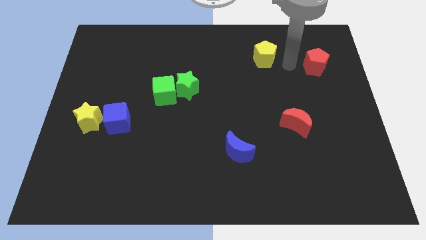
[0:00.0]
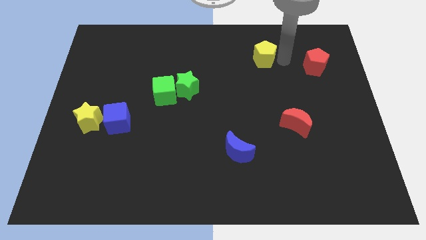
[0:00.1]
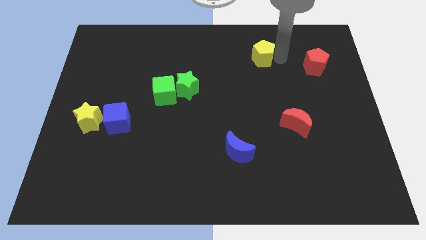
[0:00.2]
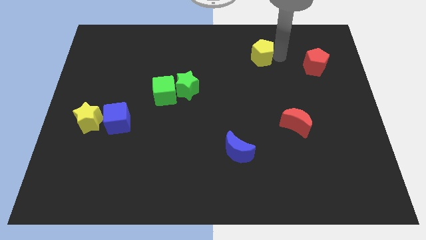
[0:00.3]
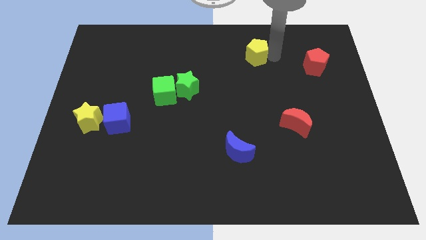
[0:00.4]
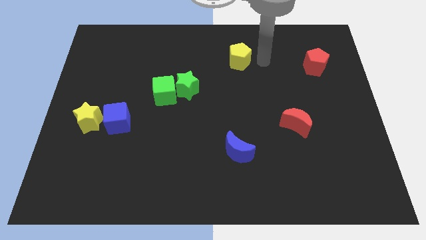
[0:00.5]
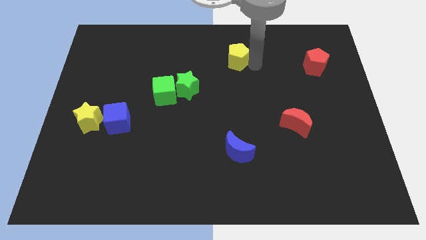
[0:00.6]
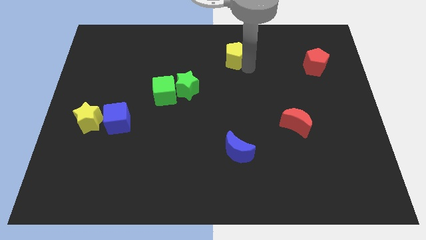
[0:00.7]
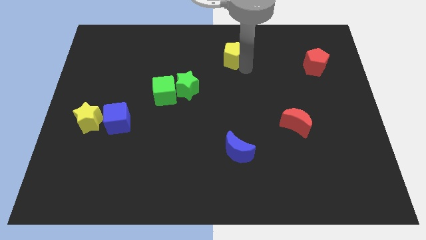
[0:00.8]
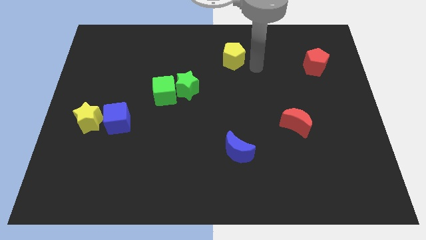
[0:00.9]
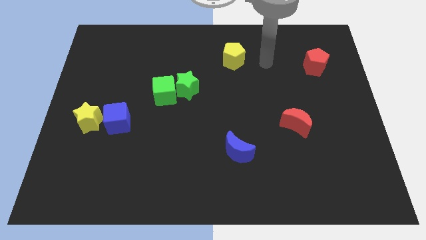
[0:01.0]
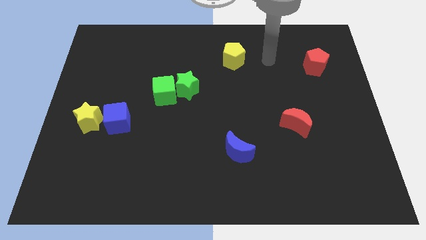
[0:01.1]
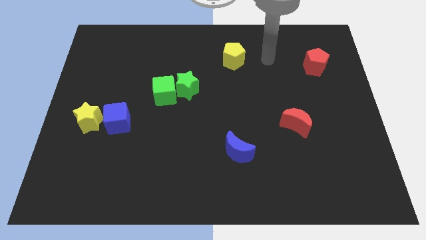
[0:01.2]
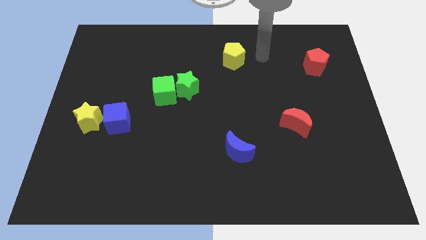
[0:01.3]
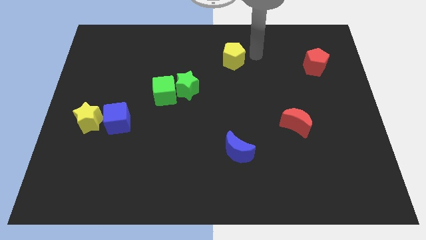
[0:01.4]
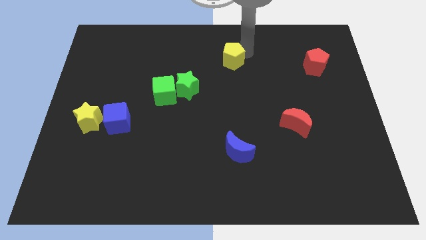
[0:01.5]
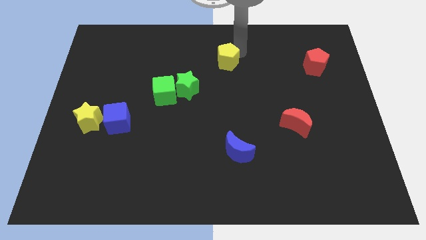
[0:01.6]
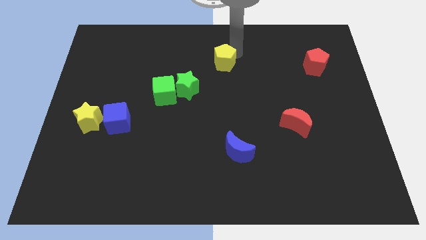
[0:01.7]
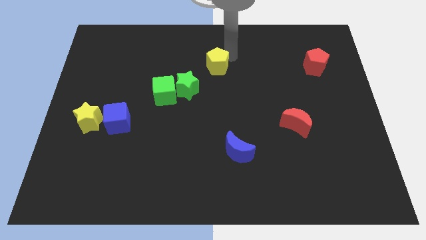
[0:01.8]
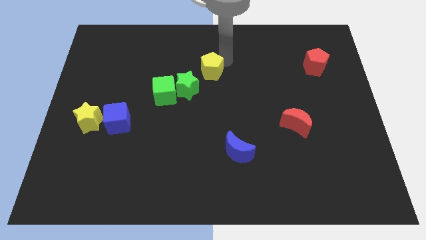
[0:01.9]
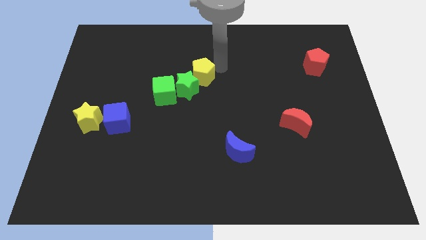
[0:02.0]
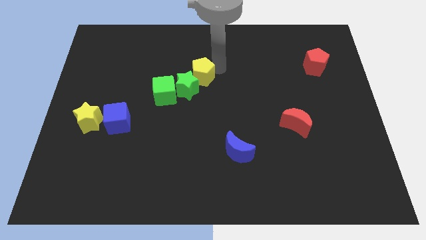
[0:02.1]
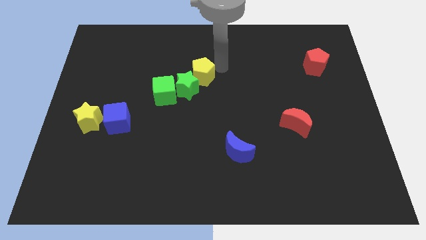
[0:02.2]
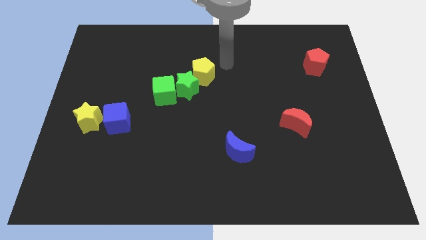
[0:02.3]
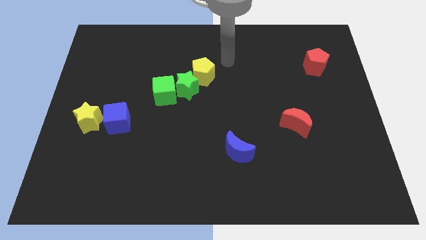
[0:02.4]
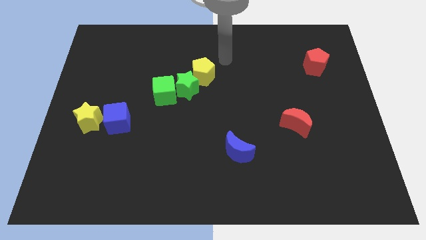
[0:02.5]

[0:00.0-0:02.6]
push yellow pentagon towards green star

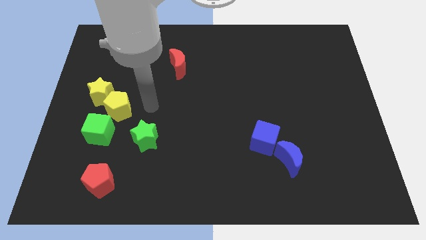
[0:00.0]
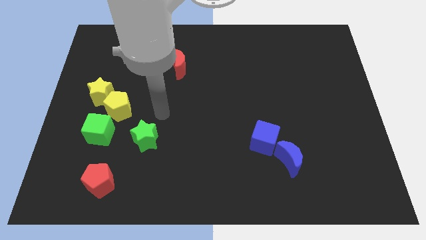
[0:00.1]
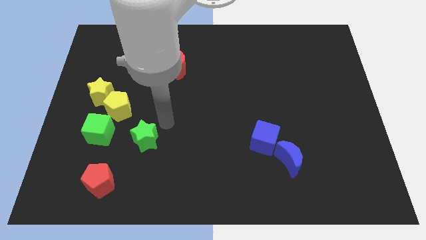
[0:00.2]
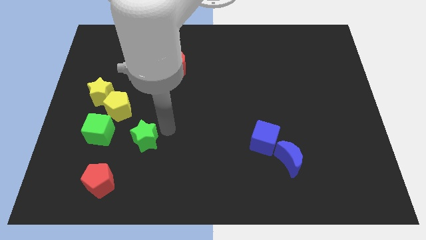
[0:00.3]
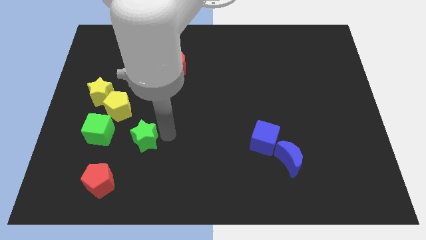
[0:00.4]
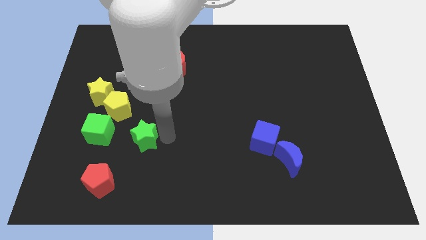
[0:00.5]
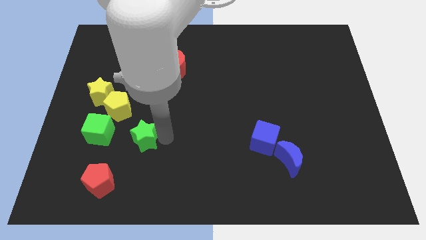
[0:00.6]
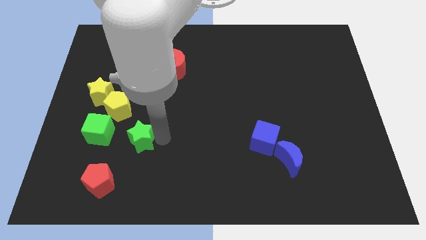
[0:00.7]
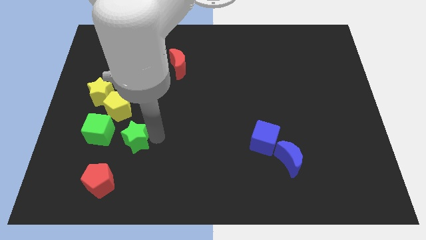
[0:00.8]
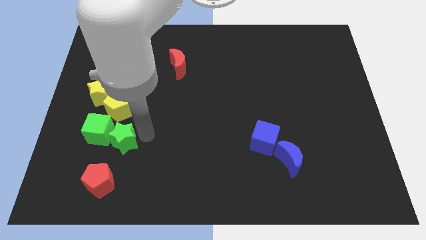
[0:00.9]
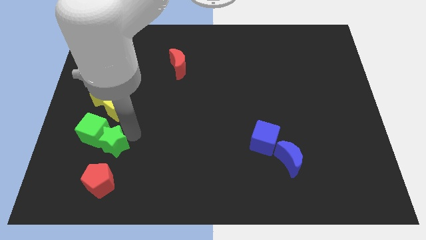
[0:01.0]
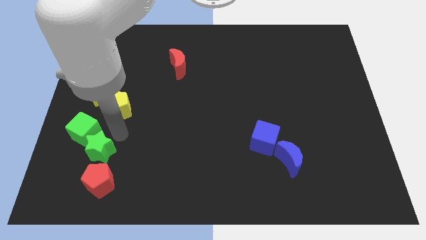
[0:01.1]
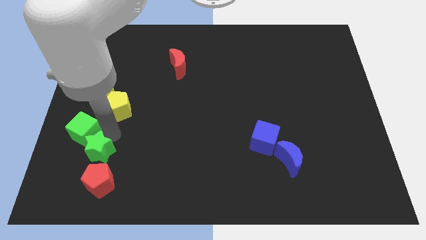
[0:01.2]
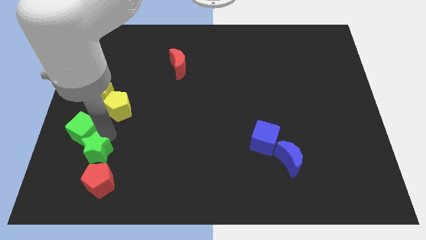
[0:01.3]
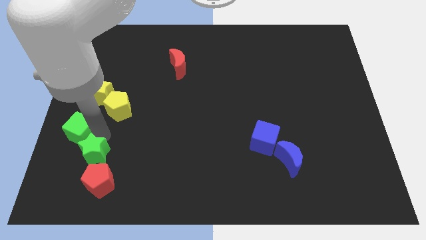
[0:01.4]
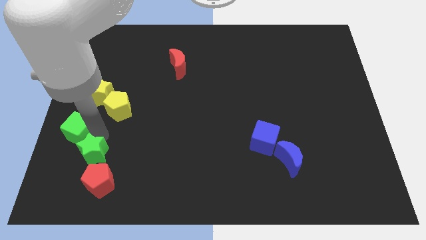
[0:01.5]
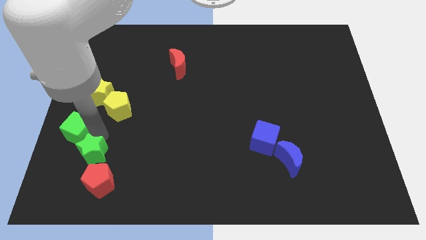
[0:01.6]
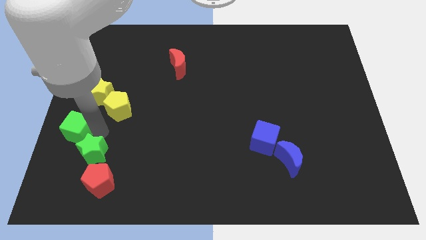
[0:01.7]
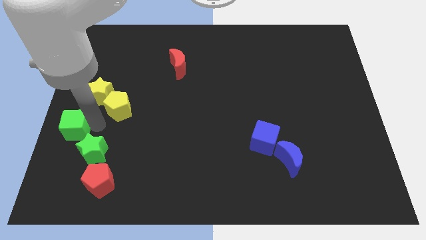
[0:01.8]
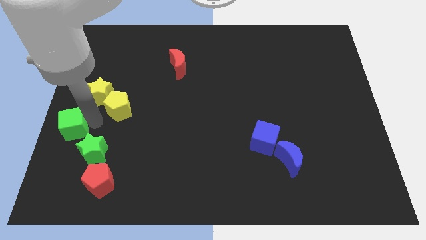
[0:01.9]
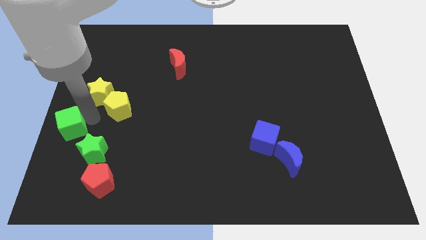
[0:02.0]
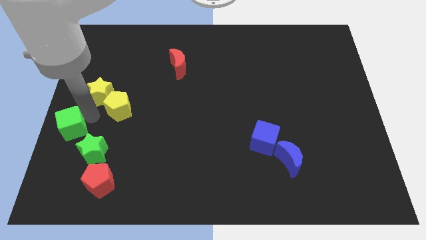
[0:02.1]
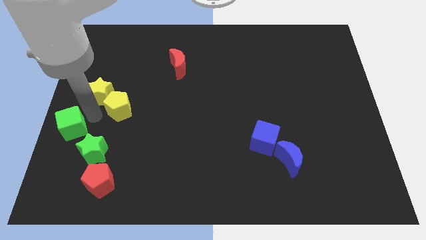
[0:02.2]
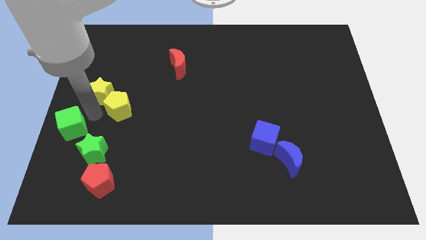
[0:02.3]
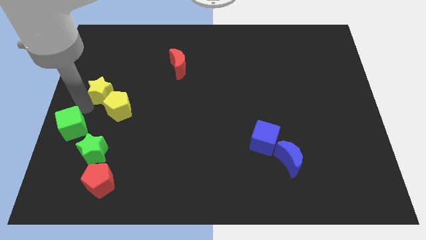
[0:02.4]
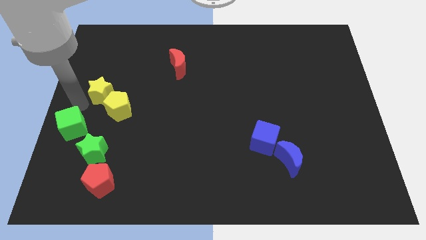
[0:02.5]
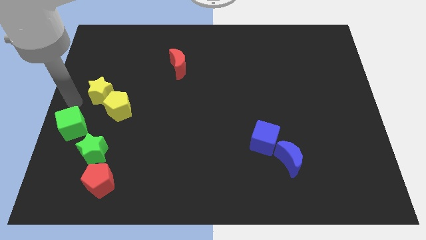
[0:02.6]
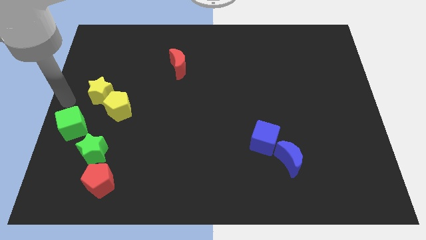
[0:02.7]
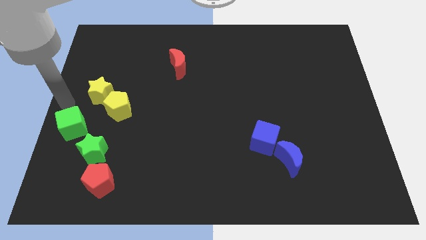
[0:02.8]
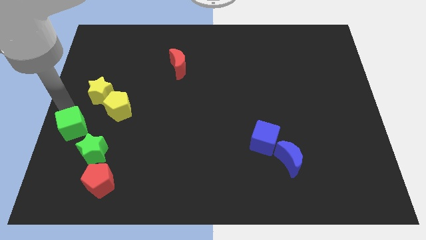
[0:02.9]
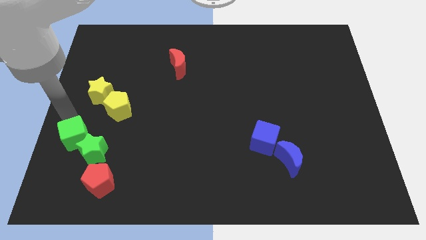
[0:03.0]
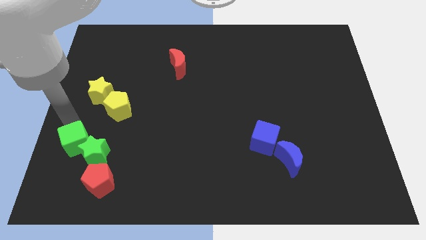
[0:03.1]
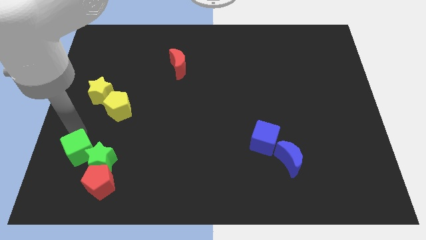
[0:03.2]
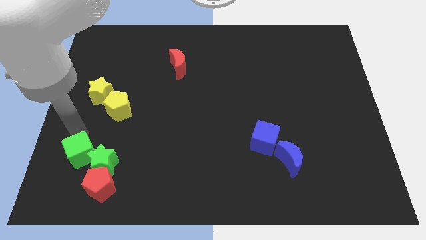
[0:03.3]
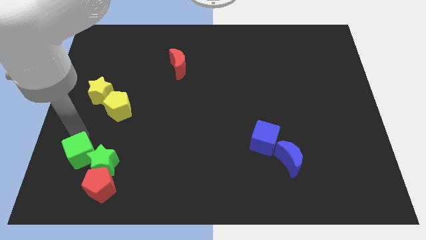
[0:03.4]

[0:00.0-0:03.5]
push both the green blocks into the red pentagon

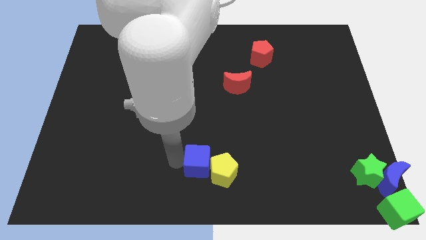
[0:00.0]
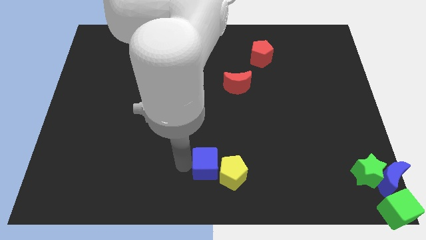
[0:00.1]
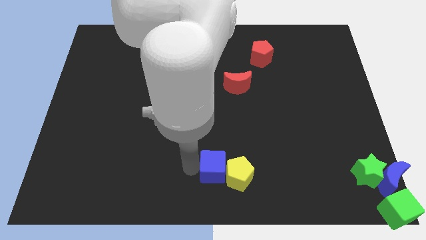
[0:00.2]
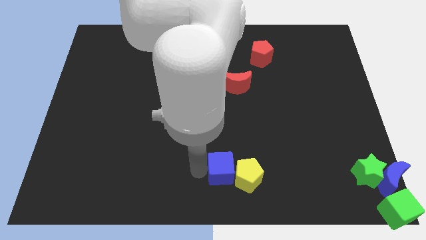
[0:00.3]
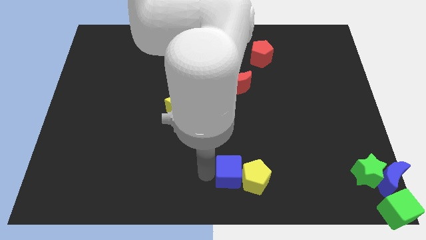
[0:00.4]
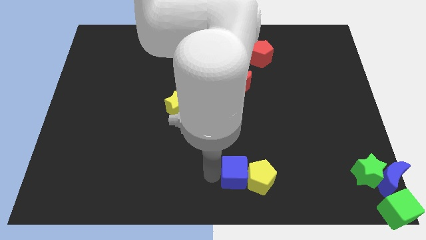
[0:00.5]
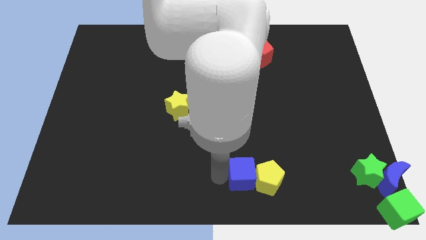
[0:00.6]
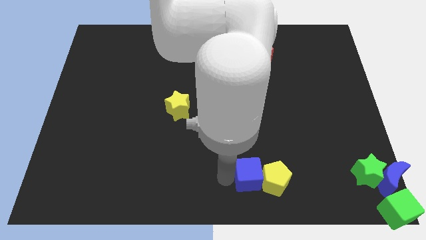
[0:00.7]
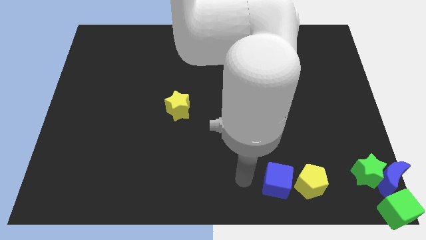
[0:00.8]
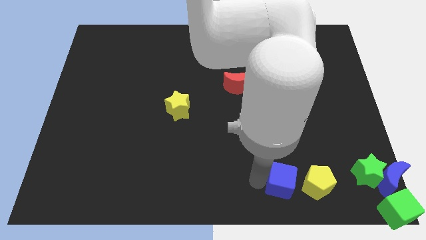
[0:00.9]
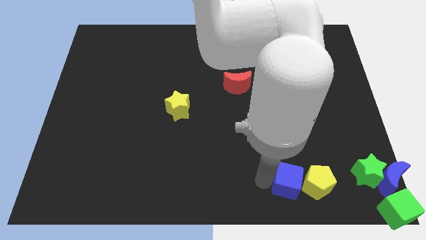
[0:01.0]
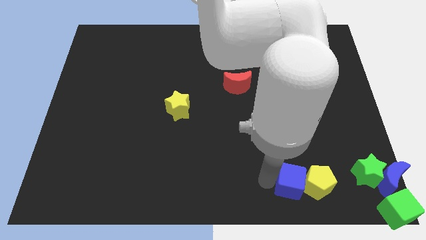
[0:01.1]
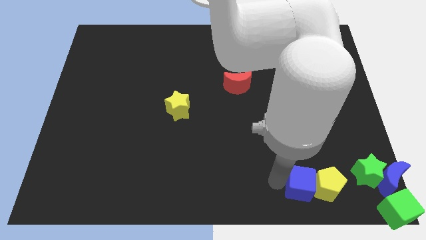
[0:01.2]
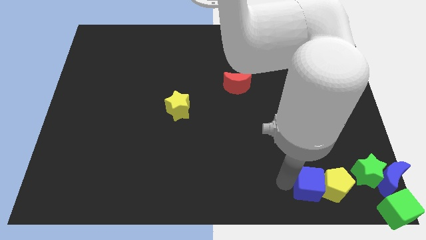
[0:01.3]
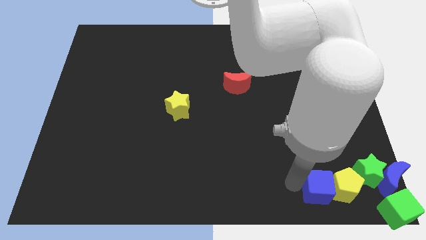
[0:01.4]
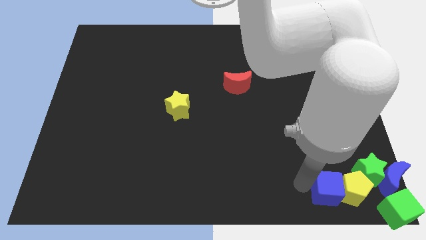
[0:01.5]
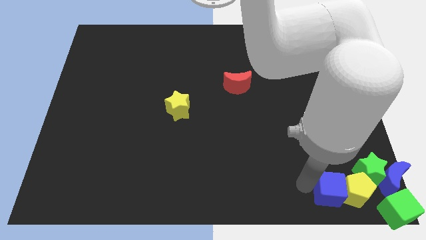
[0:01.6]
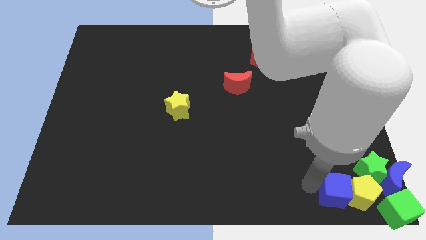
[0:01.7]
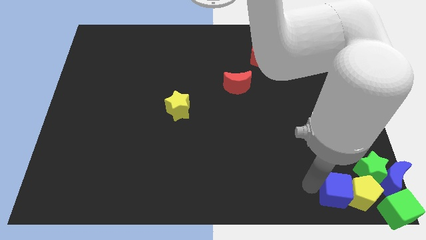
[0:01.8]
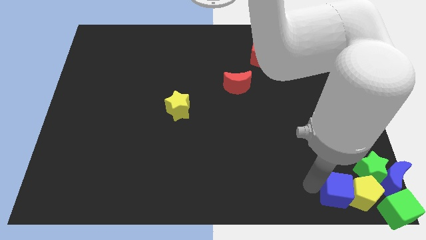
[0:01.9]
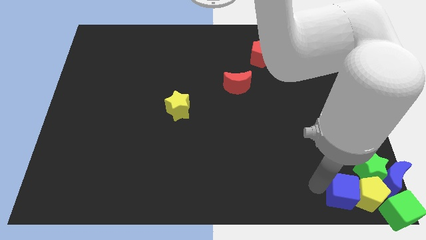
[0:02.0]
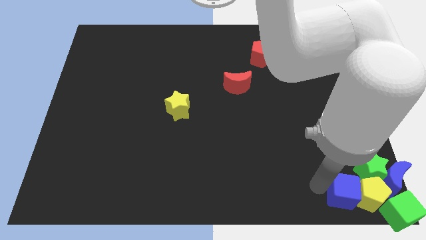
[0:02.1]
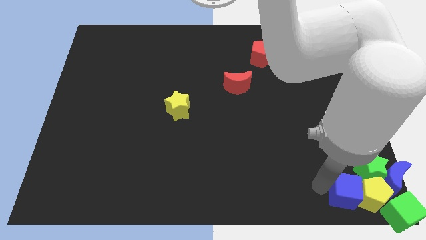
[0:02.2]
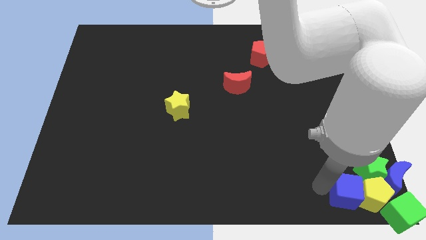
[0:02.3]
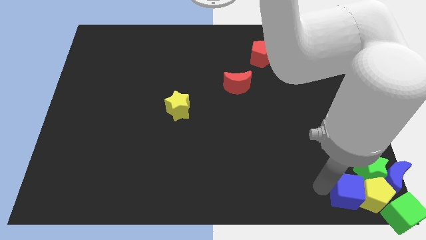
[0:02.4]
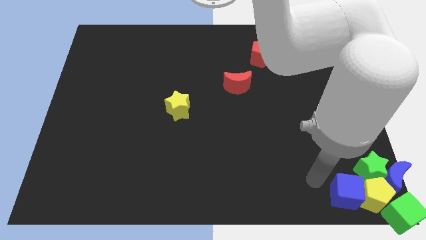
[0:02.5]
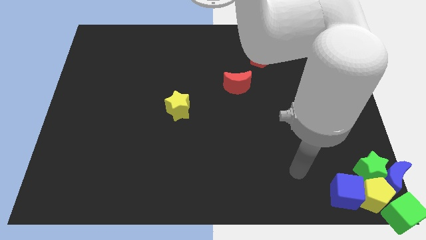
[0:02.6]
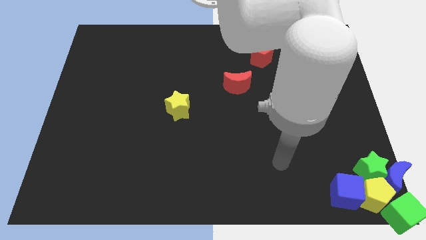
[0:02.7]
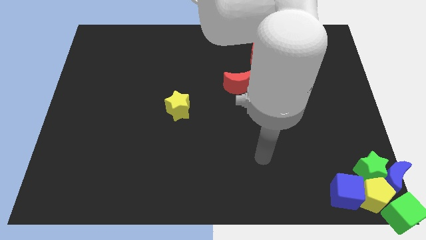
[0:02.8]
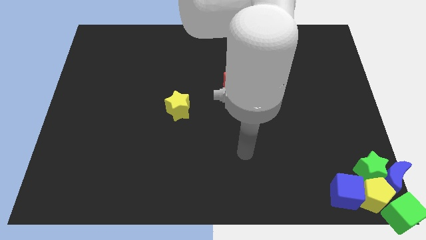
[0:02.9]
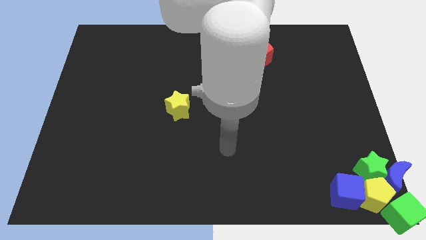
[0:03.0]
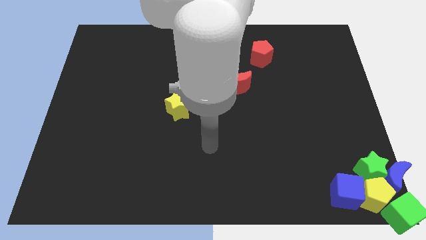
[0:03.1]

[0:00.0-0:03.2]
push the blue cube and the yellow pentagon to the group of blocks
